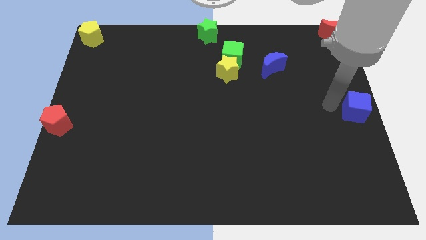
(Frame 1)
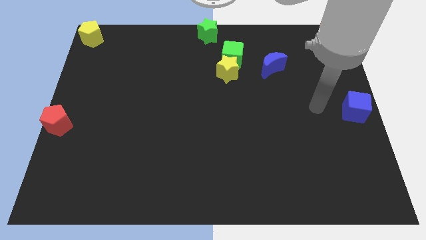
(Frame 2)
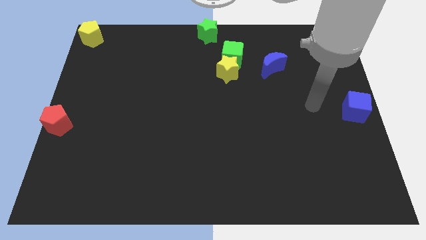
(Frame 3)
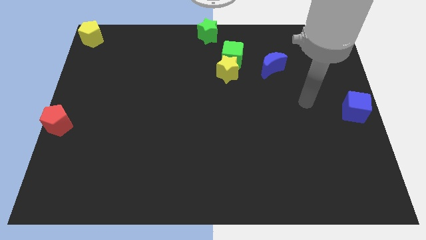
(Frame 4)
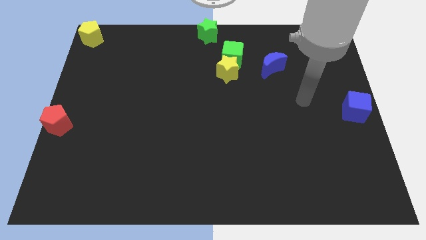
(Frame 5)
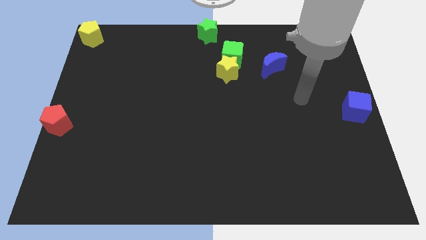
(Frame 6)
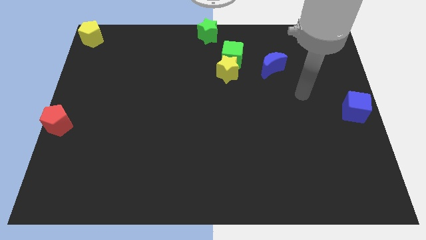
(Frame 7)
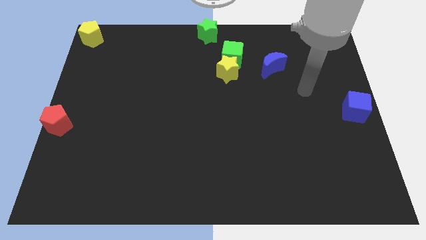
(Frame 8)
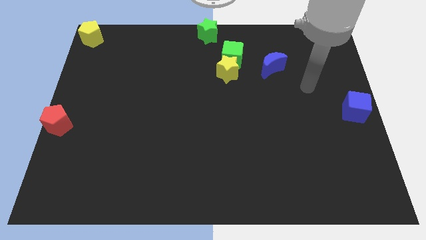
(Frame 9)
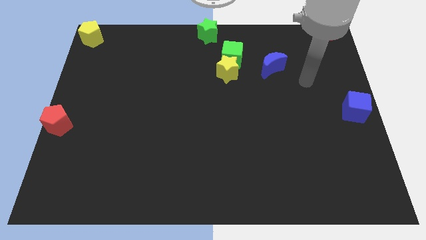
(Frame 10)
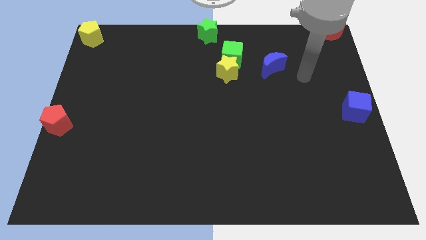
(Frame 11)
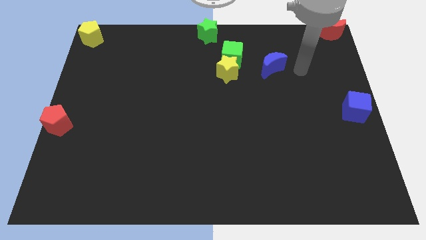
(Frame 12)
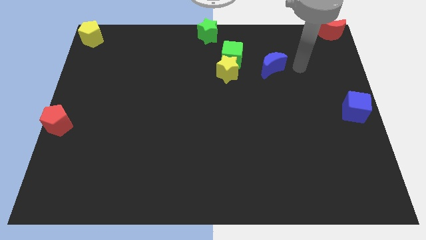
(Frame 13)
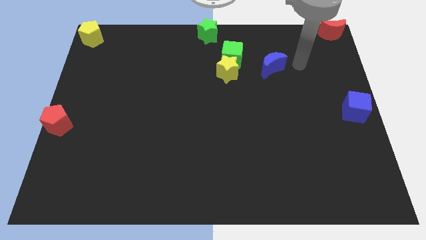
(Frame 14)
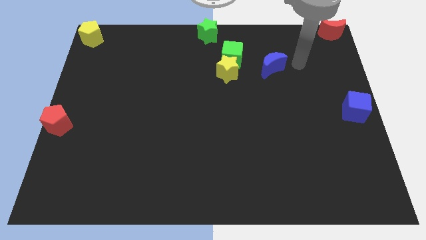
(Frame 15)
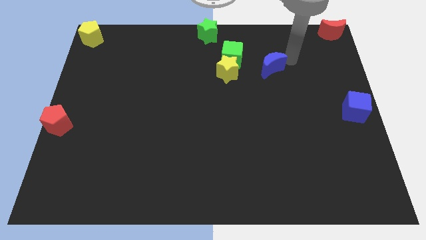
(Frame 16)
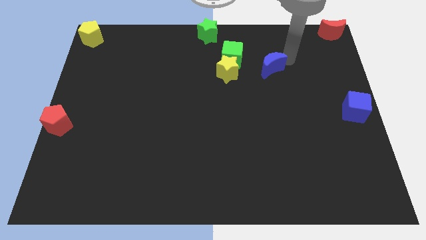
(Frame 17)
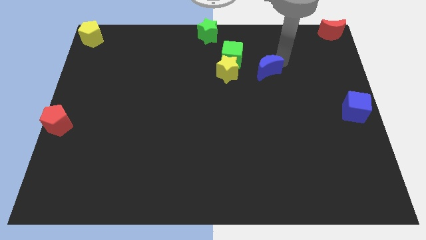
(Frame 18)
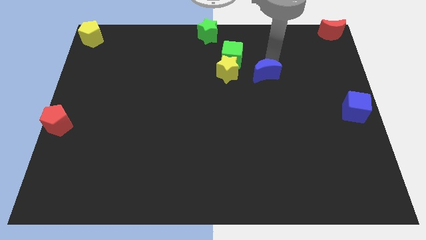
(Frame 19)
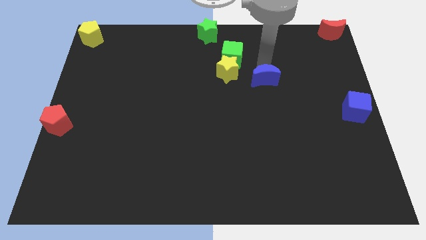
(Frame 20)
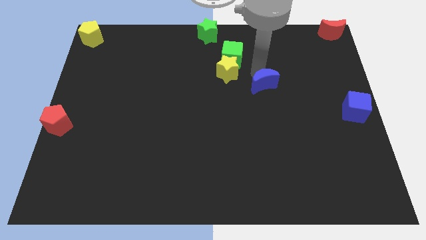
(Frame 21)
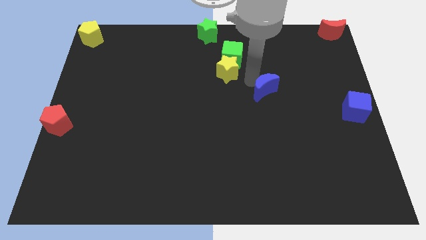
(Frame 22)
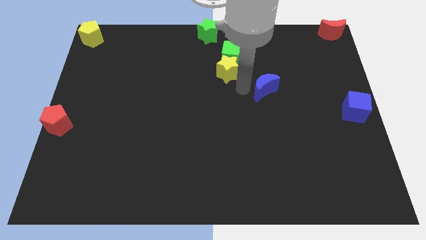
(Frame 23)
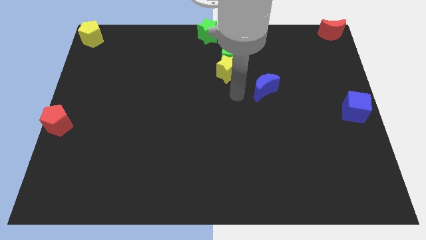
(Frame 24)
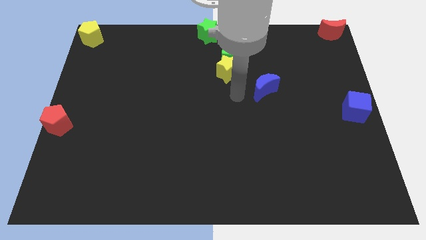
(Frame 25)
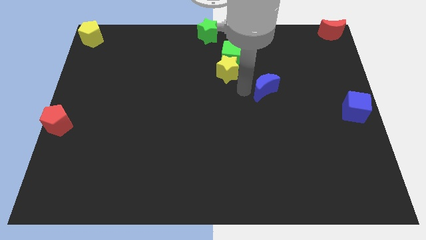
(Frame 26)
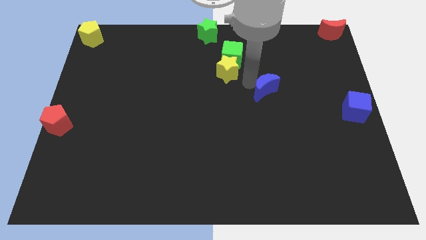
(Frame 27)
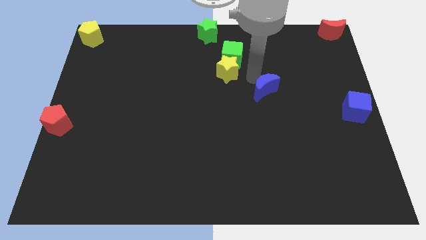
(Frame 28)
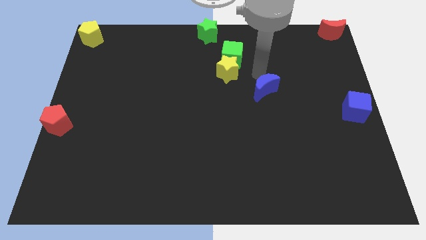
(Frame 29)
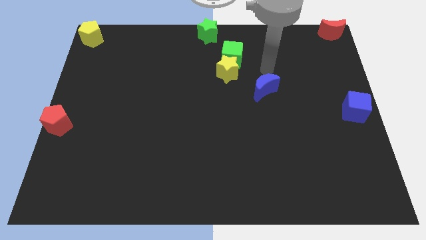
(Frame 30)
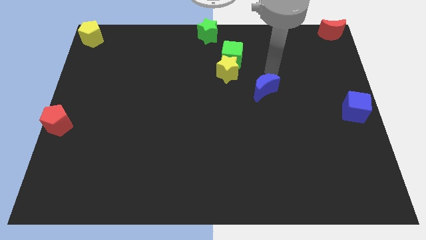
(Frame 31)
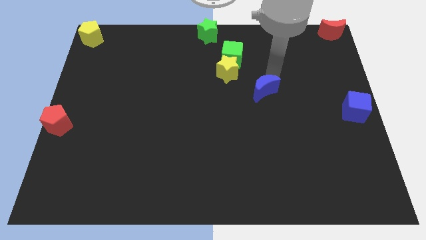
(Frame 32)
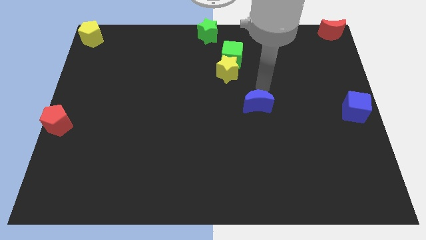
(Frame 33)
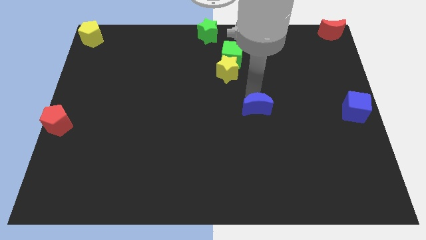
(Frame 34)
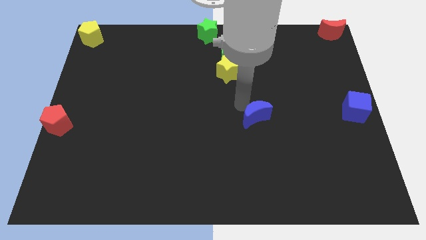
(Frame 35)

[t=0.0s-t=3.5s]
push the blue crescent parallel to the blue cube

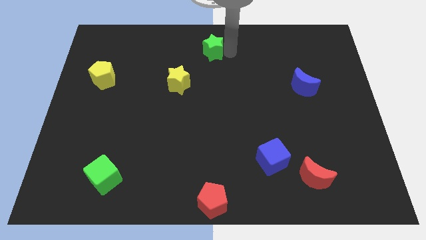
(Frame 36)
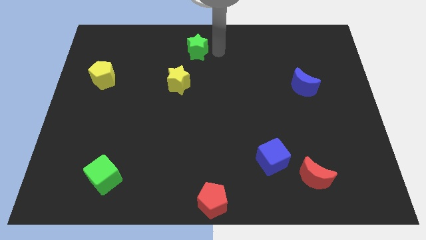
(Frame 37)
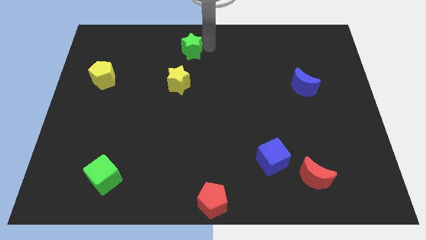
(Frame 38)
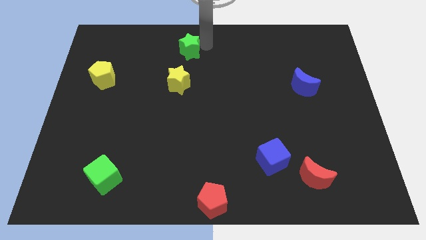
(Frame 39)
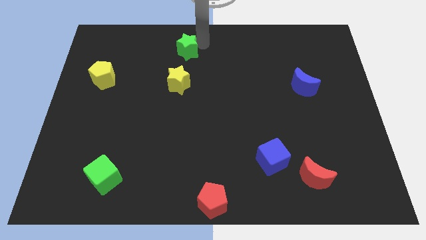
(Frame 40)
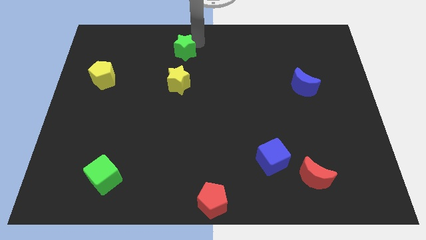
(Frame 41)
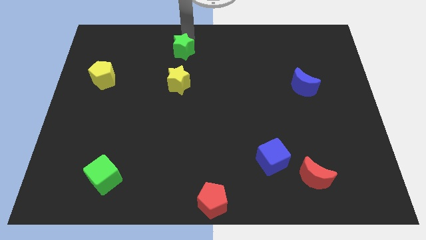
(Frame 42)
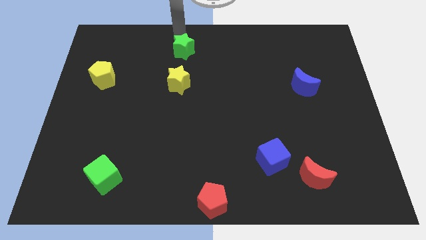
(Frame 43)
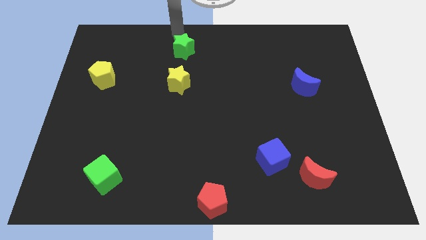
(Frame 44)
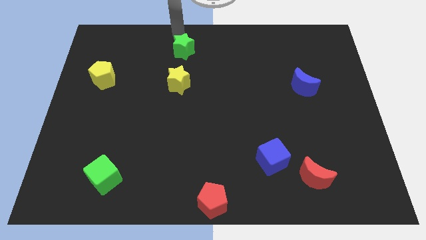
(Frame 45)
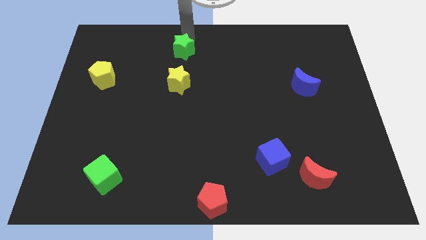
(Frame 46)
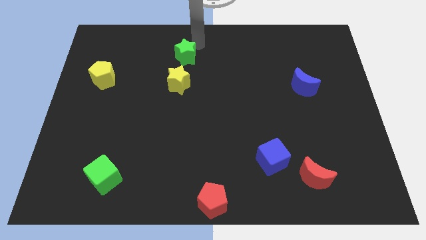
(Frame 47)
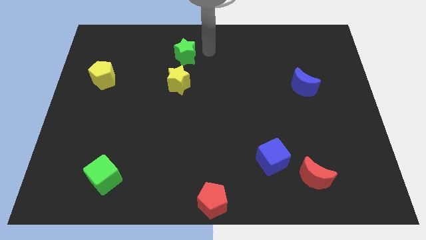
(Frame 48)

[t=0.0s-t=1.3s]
place the green star to the top of yellow star

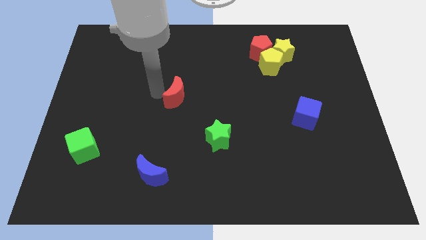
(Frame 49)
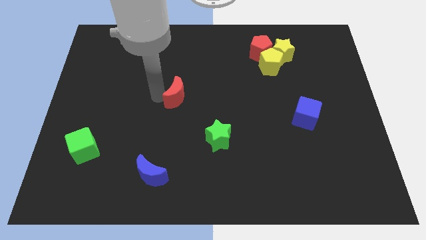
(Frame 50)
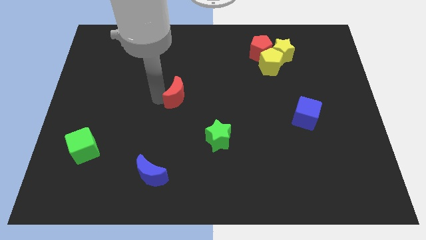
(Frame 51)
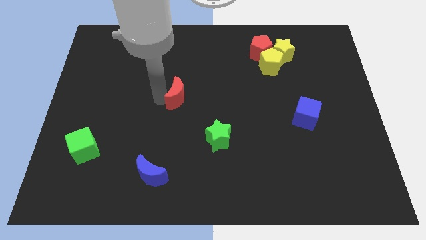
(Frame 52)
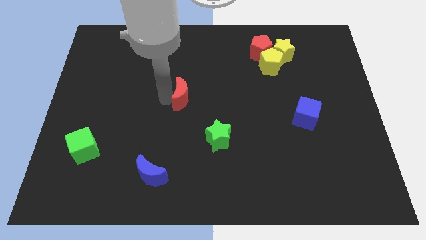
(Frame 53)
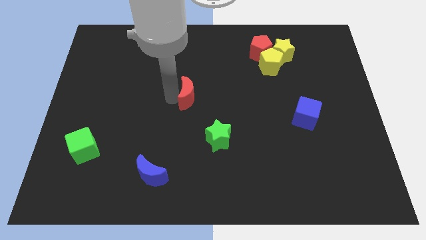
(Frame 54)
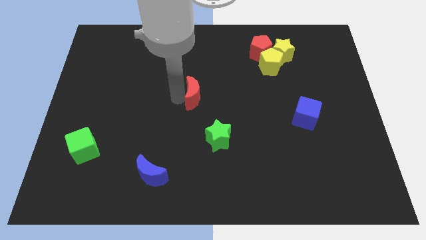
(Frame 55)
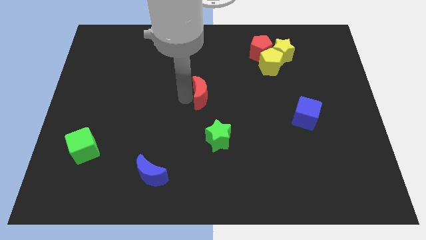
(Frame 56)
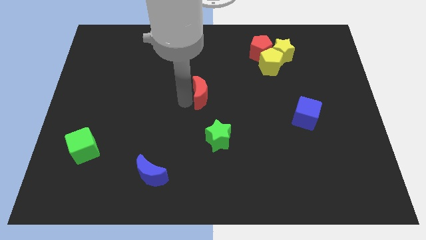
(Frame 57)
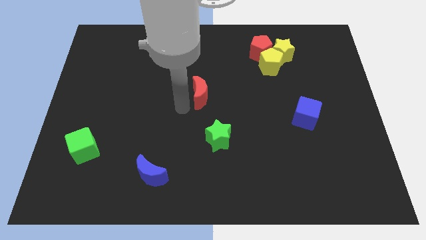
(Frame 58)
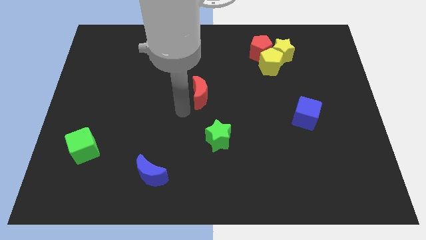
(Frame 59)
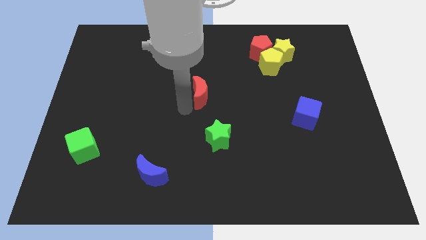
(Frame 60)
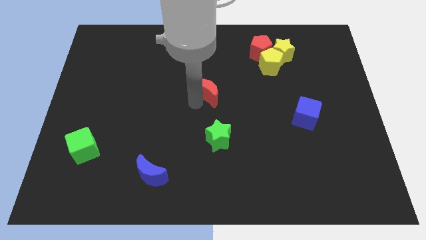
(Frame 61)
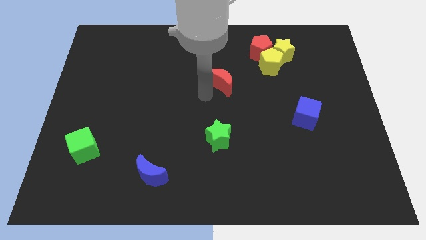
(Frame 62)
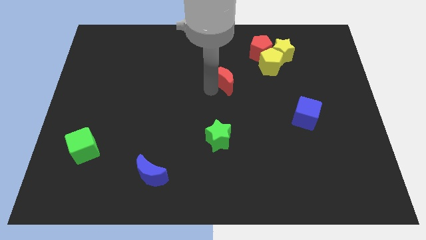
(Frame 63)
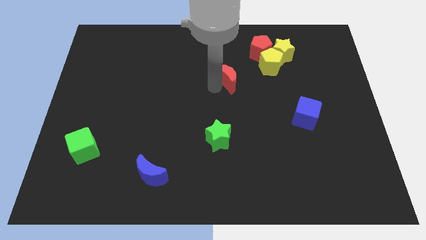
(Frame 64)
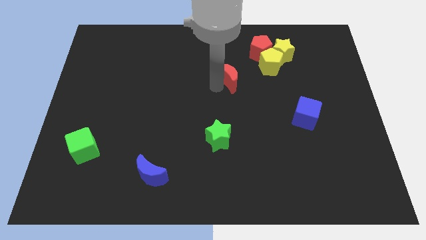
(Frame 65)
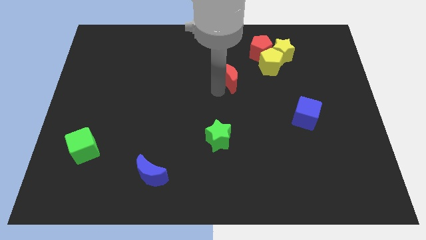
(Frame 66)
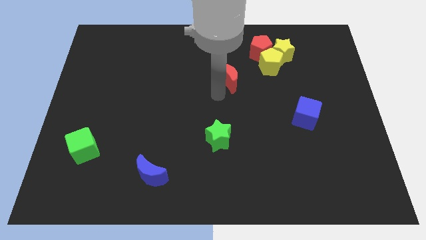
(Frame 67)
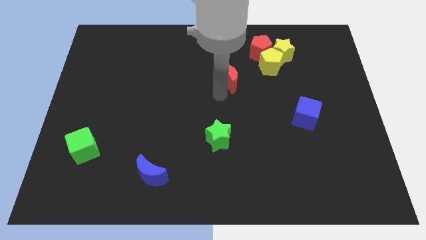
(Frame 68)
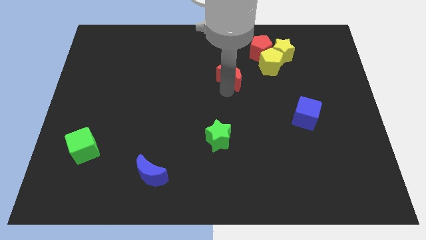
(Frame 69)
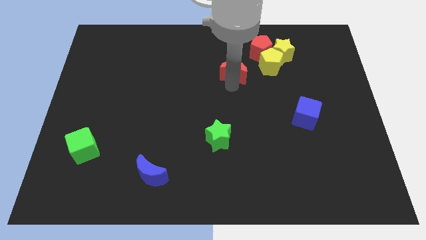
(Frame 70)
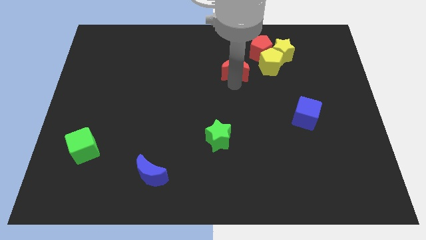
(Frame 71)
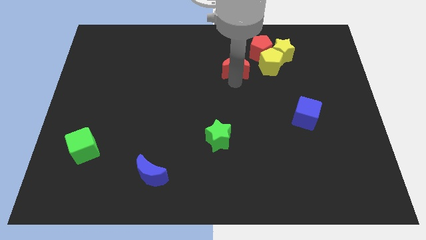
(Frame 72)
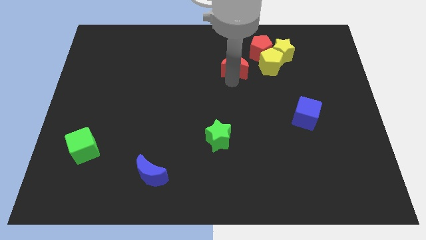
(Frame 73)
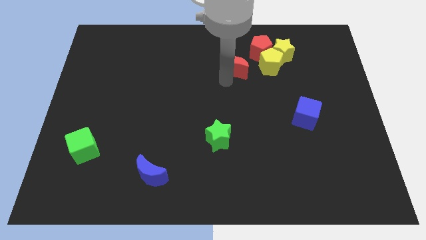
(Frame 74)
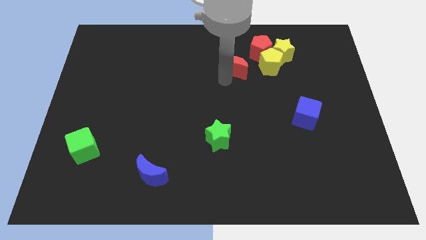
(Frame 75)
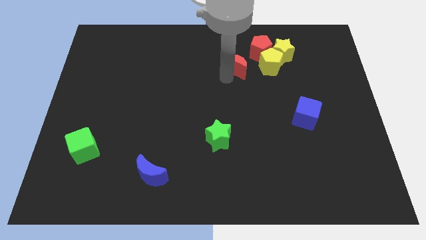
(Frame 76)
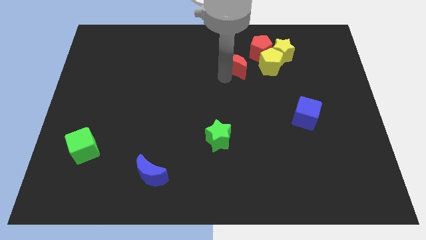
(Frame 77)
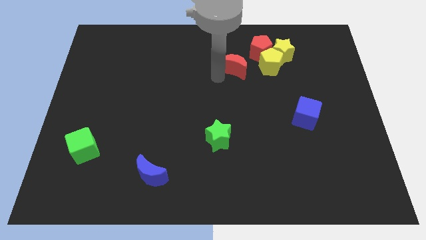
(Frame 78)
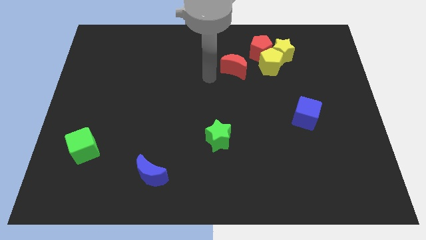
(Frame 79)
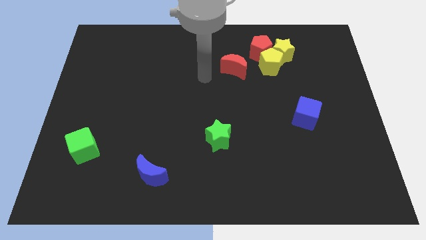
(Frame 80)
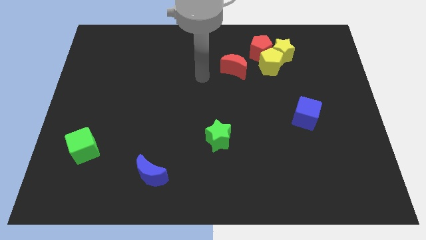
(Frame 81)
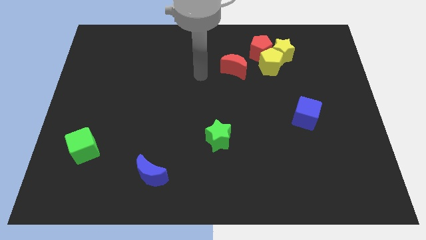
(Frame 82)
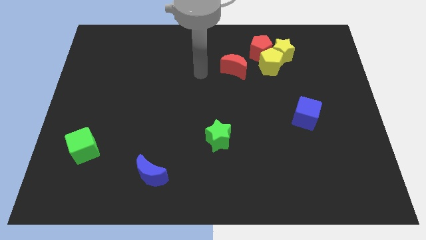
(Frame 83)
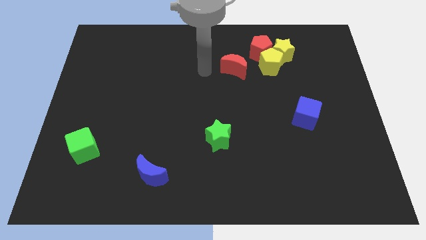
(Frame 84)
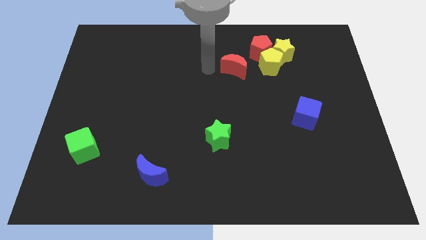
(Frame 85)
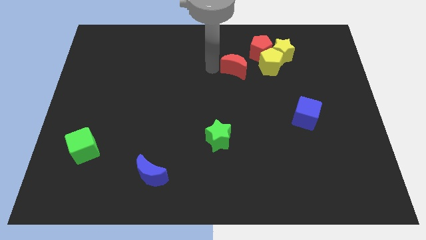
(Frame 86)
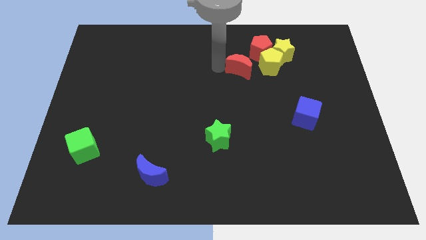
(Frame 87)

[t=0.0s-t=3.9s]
push the red crescent close to the yellow pentagon

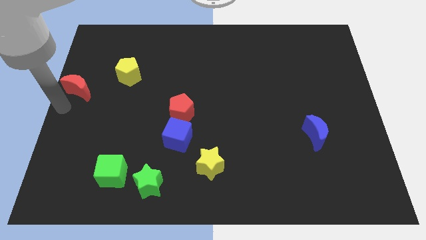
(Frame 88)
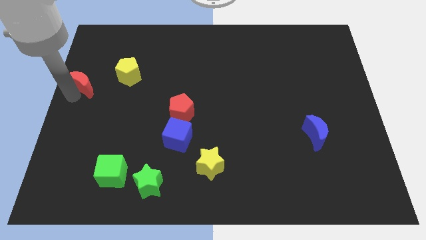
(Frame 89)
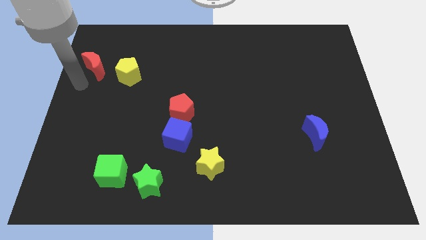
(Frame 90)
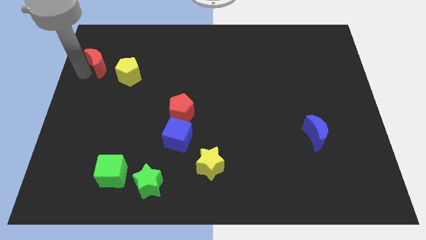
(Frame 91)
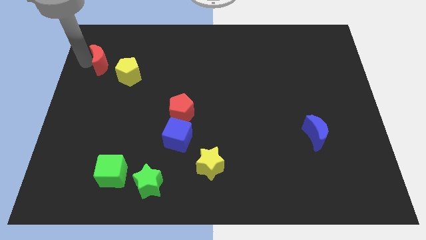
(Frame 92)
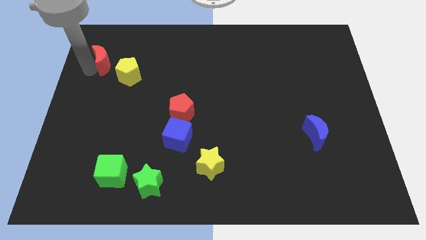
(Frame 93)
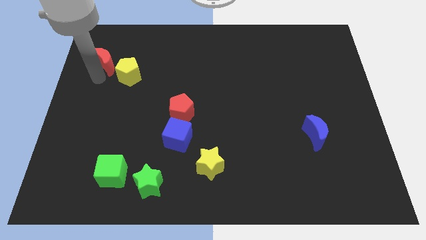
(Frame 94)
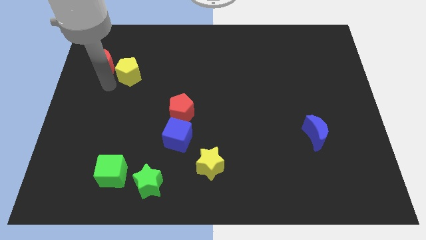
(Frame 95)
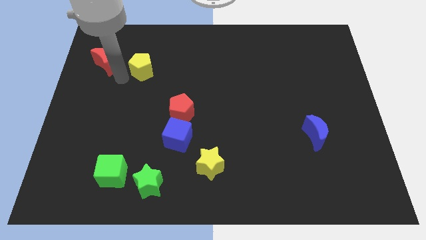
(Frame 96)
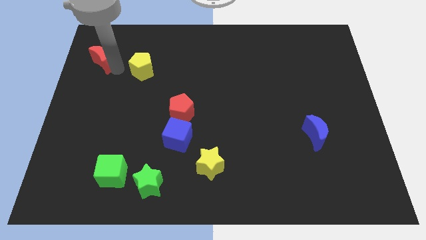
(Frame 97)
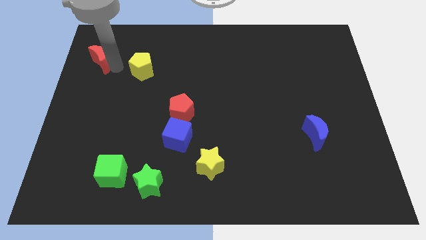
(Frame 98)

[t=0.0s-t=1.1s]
slide red moon to the top left of yellow pentagon
